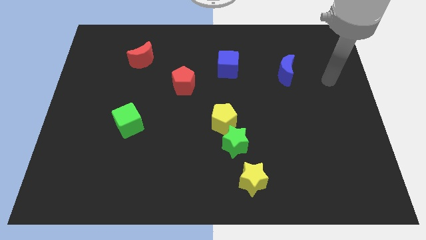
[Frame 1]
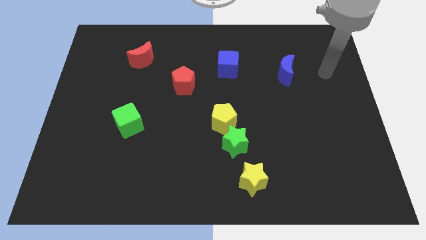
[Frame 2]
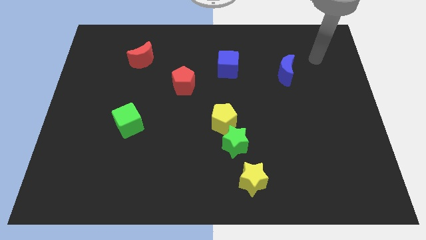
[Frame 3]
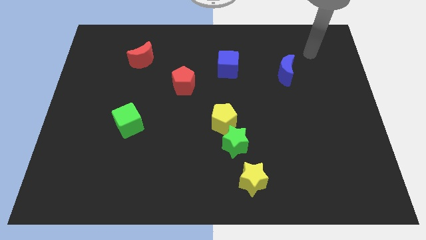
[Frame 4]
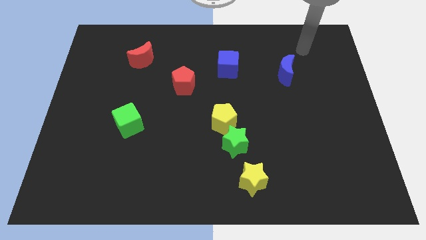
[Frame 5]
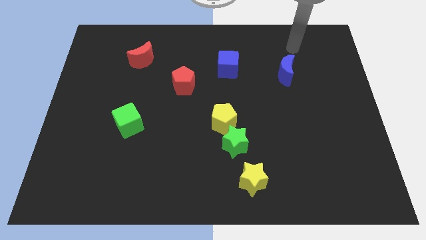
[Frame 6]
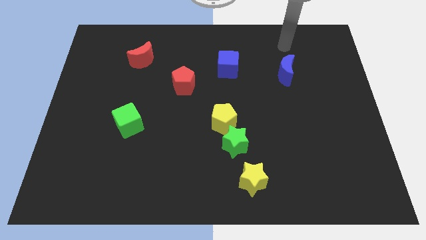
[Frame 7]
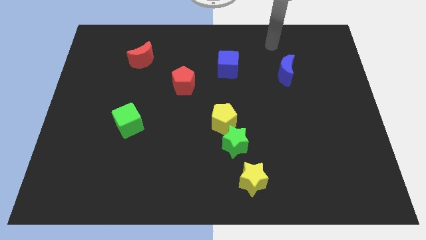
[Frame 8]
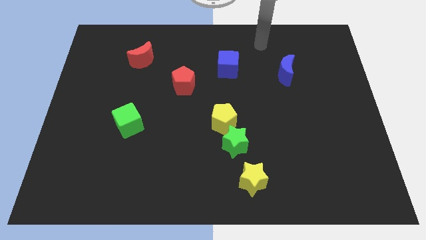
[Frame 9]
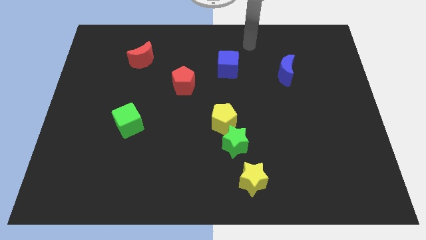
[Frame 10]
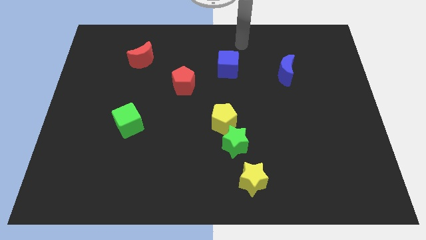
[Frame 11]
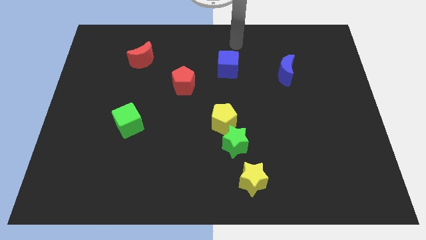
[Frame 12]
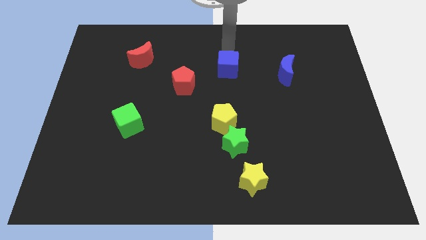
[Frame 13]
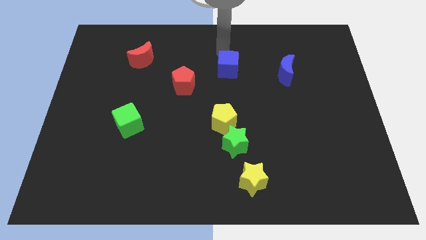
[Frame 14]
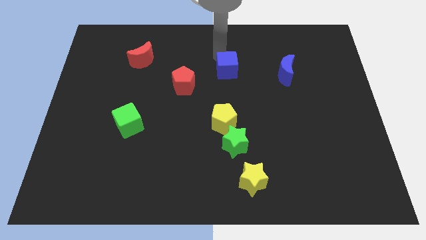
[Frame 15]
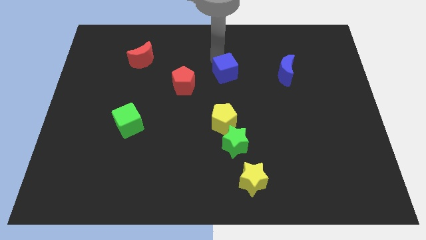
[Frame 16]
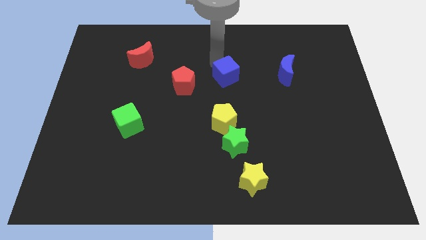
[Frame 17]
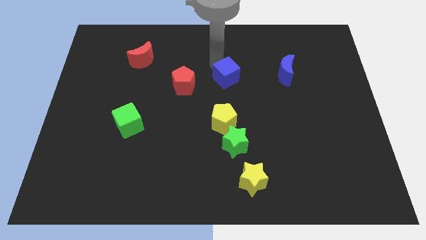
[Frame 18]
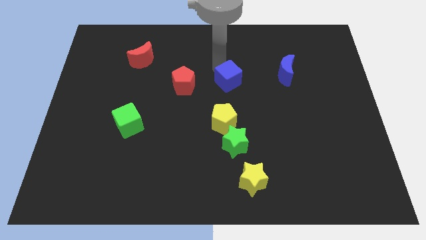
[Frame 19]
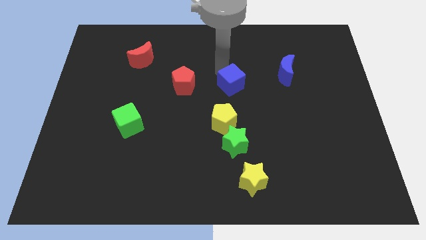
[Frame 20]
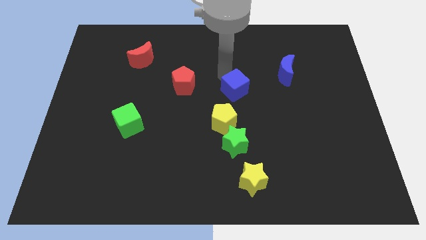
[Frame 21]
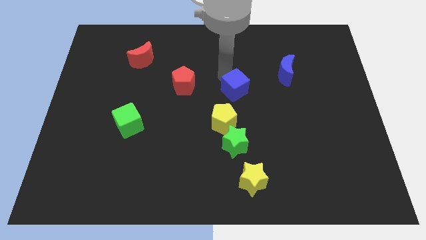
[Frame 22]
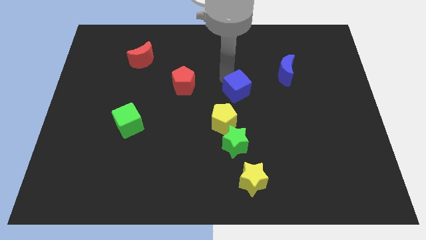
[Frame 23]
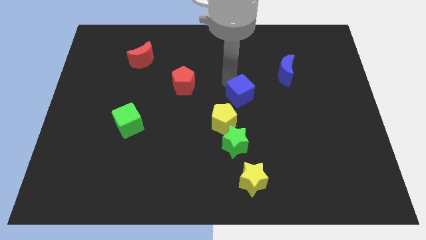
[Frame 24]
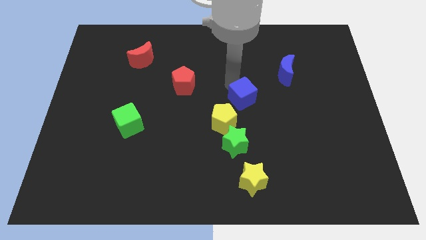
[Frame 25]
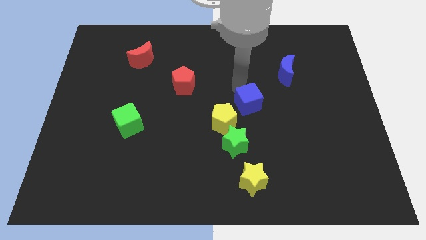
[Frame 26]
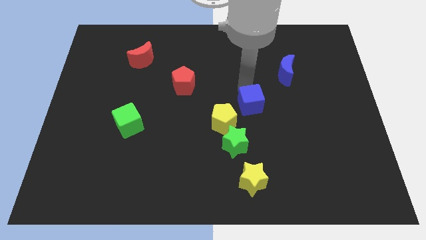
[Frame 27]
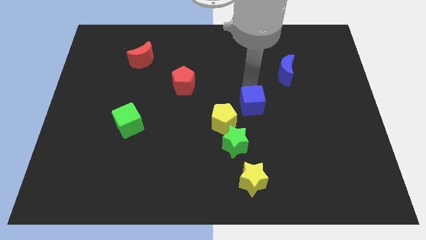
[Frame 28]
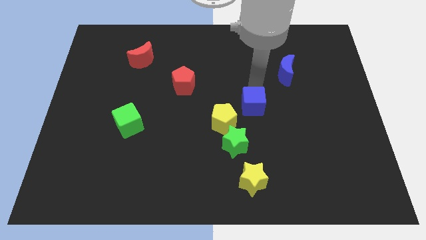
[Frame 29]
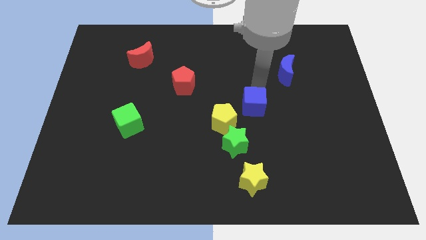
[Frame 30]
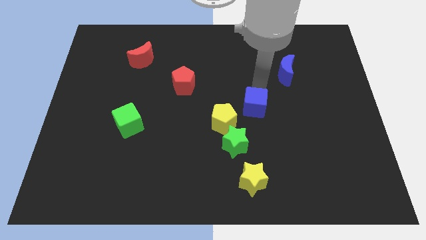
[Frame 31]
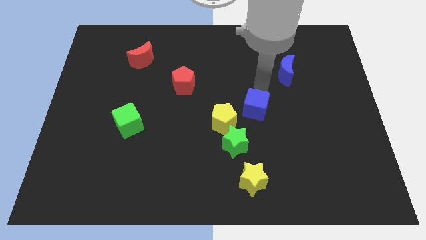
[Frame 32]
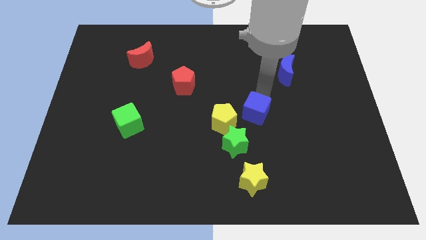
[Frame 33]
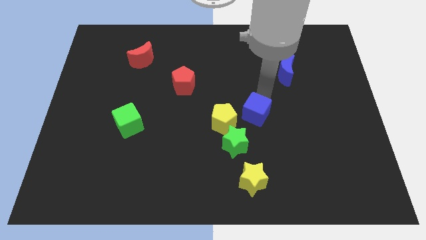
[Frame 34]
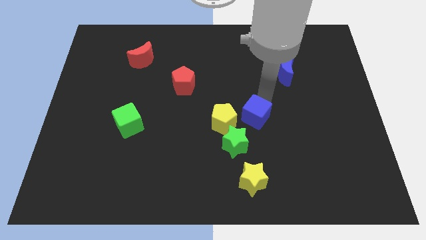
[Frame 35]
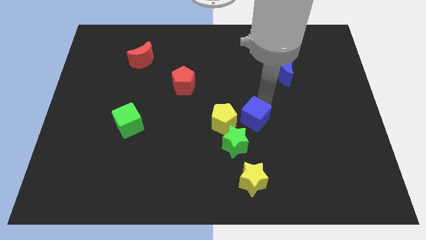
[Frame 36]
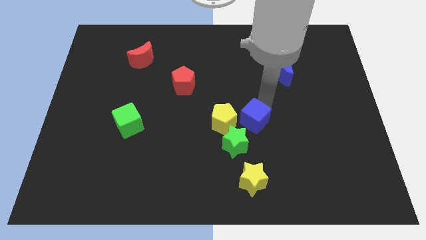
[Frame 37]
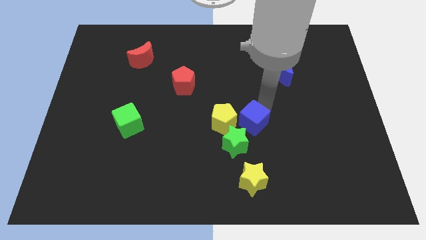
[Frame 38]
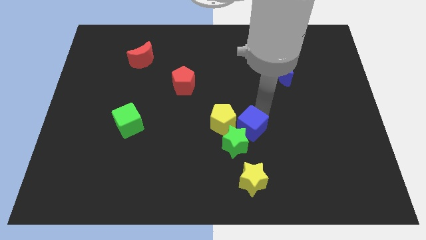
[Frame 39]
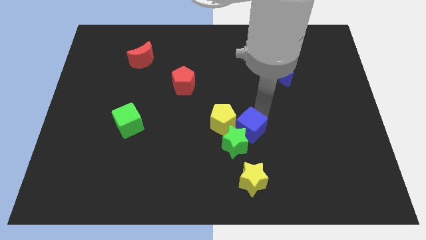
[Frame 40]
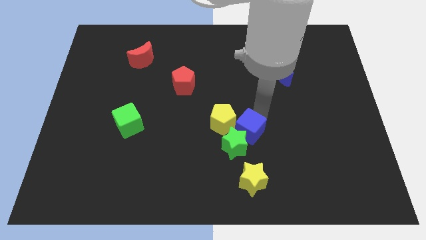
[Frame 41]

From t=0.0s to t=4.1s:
put the blue cube towards the green star

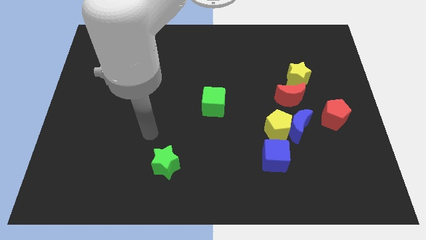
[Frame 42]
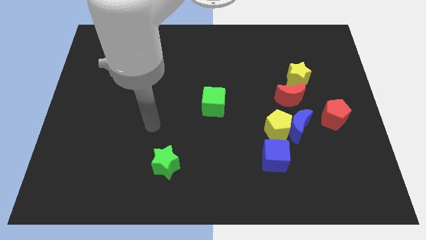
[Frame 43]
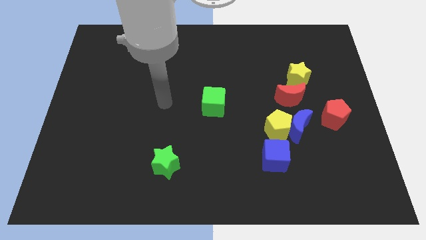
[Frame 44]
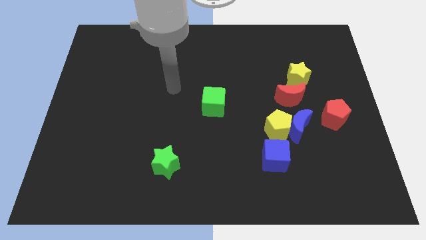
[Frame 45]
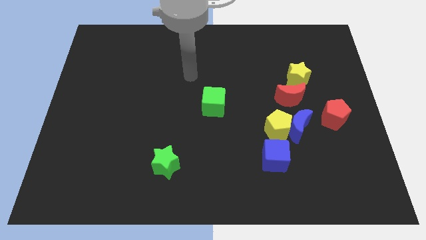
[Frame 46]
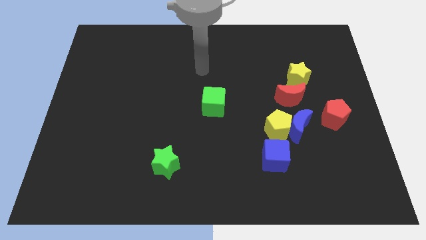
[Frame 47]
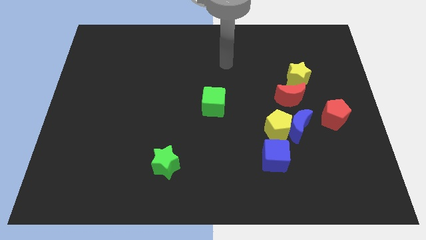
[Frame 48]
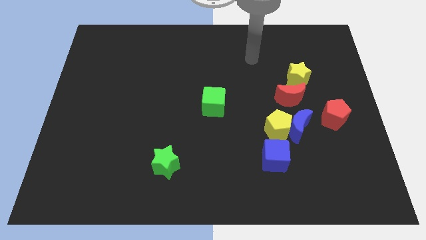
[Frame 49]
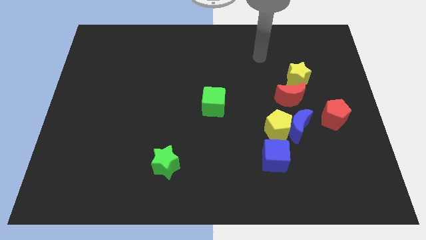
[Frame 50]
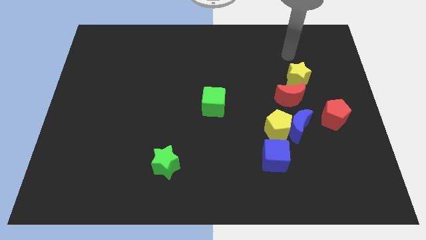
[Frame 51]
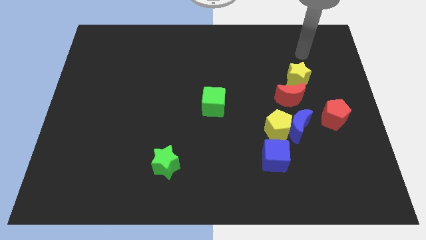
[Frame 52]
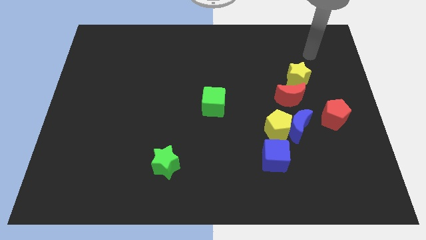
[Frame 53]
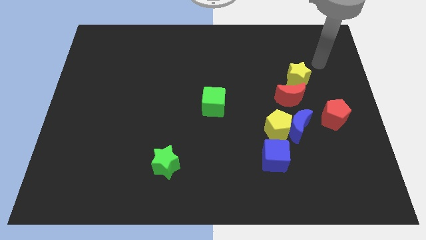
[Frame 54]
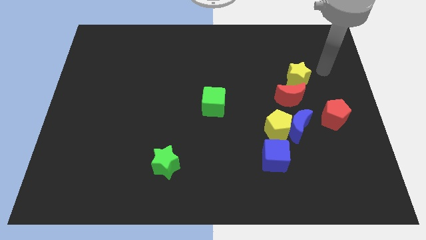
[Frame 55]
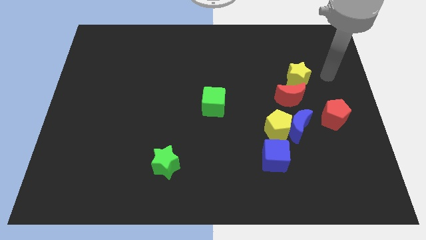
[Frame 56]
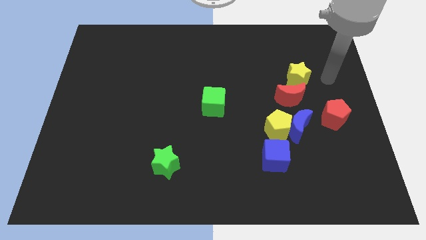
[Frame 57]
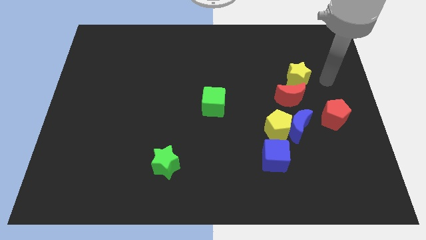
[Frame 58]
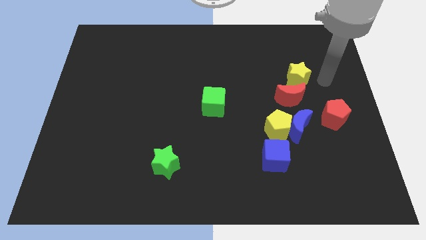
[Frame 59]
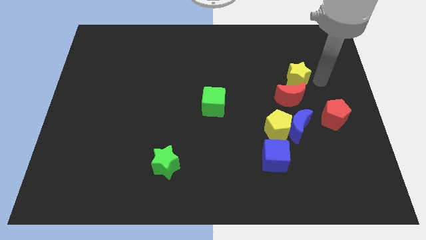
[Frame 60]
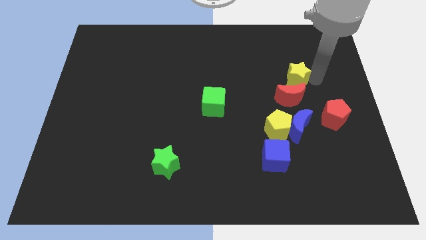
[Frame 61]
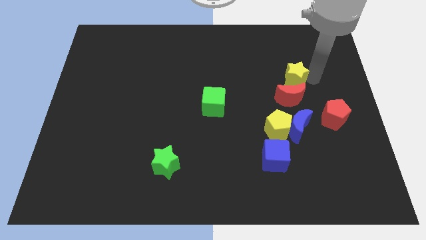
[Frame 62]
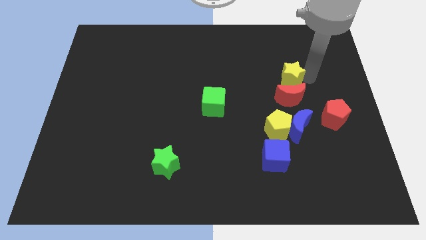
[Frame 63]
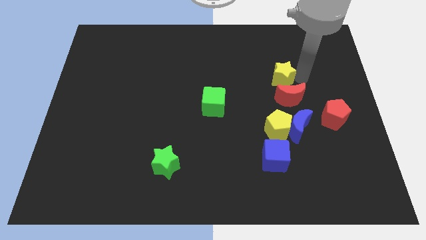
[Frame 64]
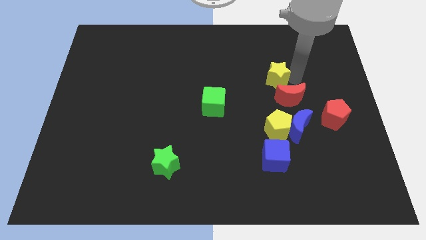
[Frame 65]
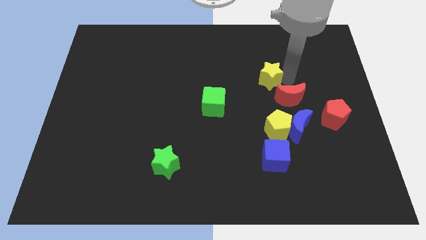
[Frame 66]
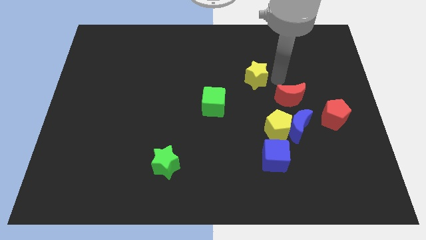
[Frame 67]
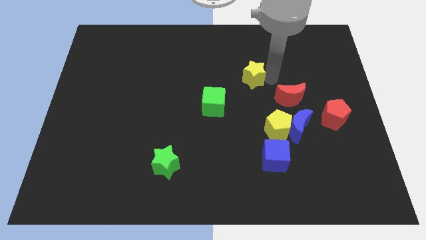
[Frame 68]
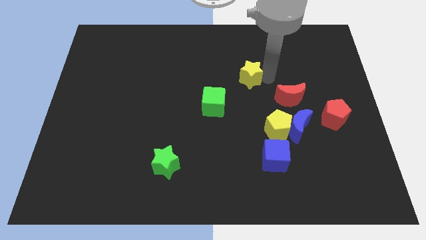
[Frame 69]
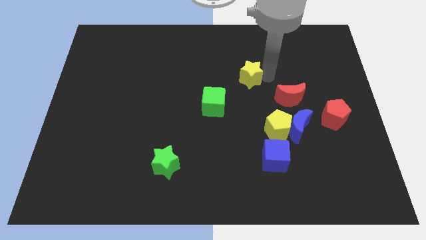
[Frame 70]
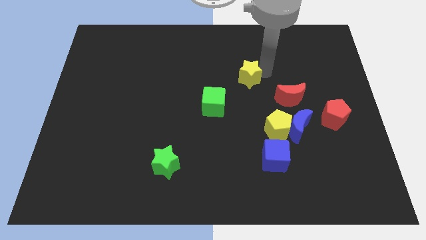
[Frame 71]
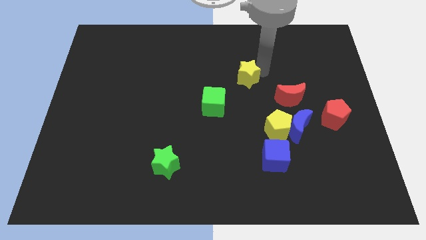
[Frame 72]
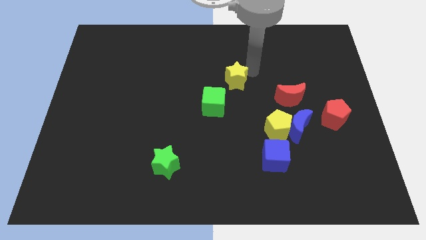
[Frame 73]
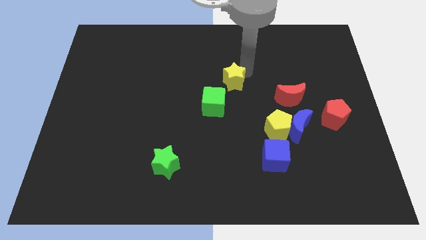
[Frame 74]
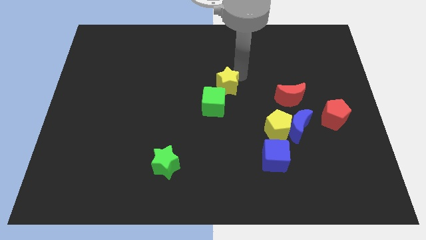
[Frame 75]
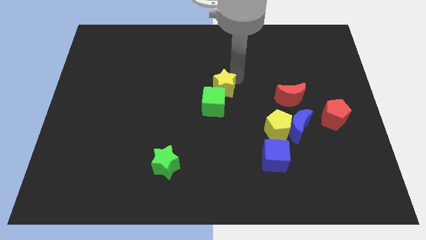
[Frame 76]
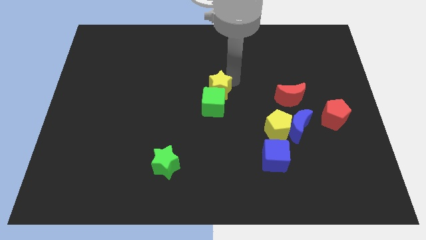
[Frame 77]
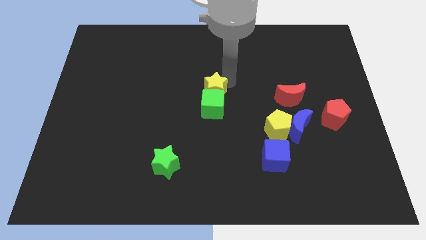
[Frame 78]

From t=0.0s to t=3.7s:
push the yellow star to the green cube

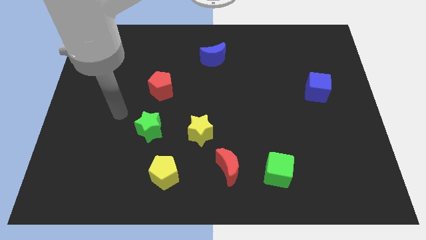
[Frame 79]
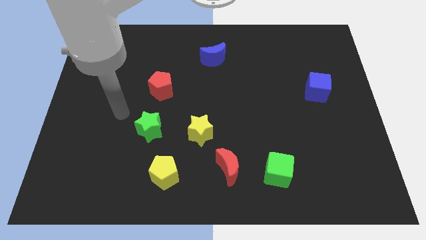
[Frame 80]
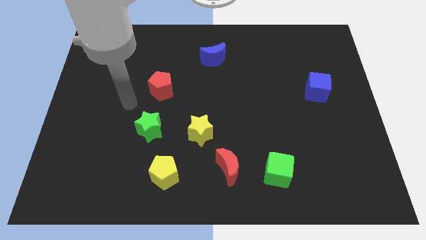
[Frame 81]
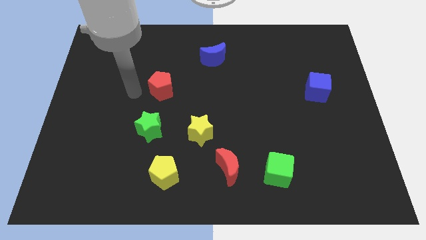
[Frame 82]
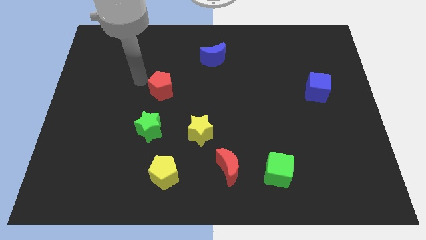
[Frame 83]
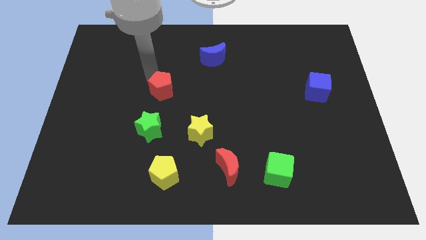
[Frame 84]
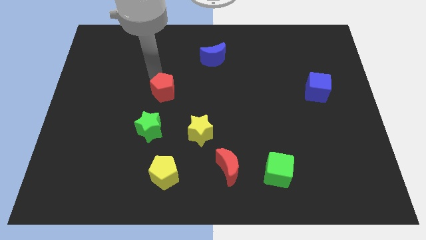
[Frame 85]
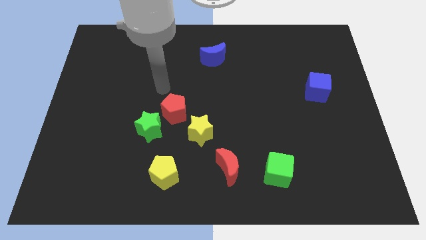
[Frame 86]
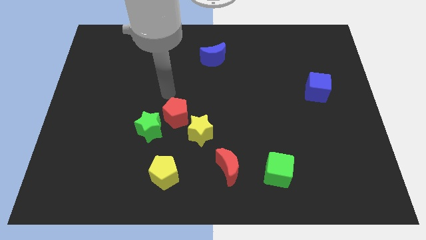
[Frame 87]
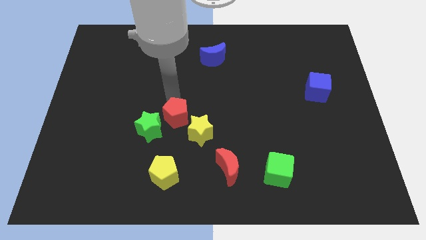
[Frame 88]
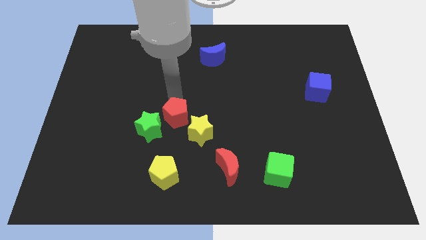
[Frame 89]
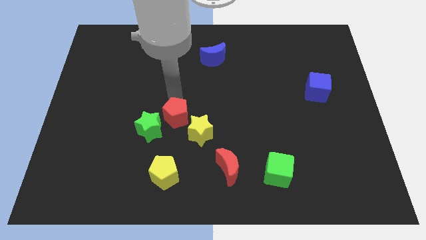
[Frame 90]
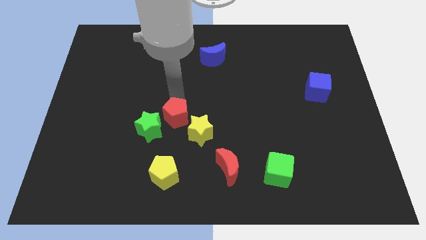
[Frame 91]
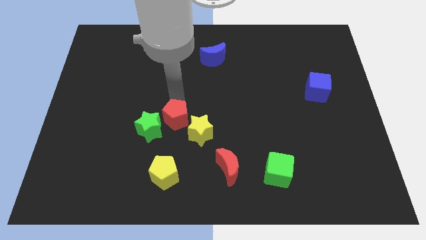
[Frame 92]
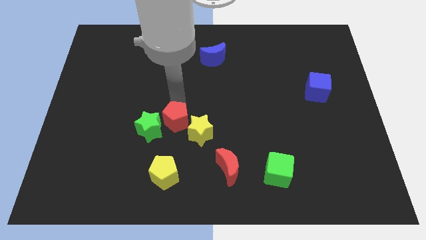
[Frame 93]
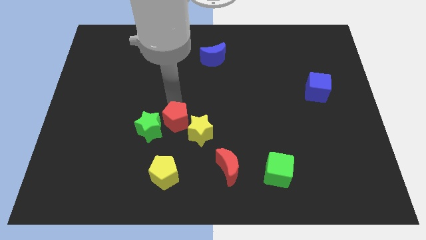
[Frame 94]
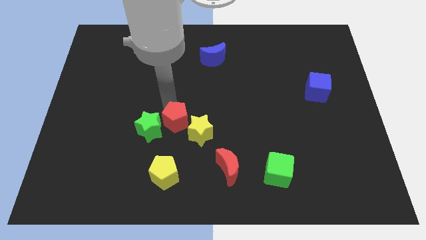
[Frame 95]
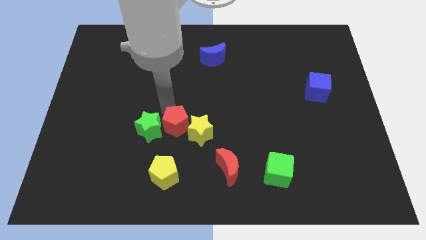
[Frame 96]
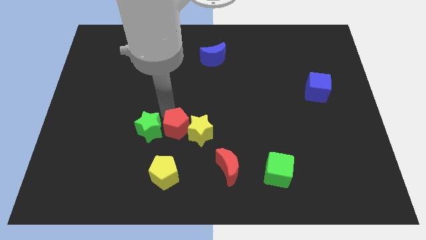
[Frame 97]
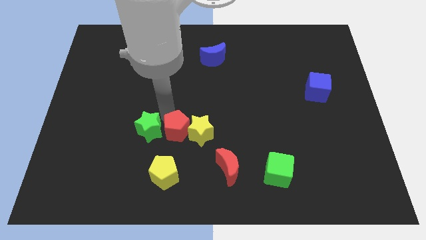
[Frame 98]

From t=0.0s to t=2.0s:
put the red pentagon towards the yellow star
